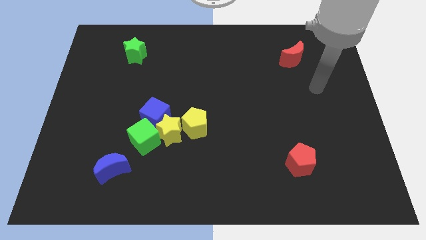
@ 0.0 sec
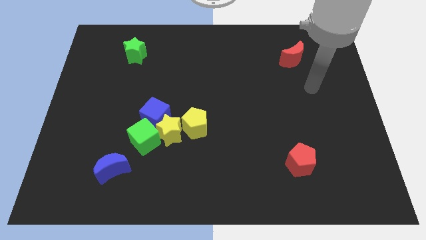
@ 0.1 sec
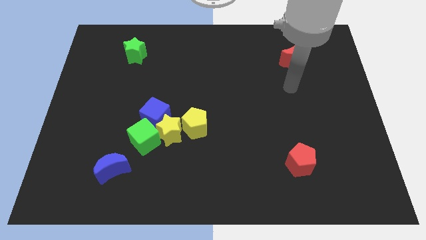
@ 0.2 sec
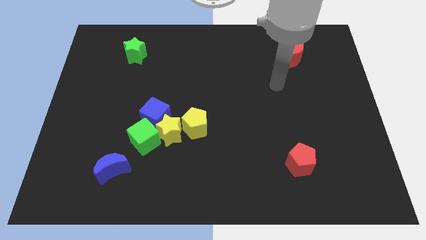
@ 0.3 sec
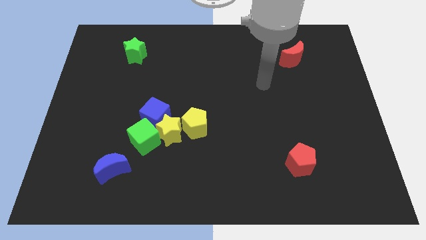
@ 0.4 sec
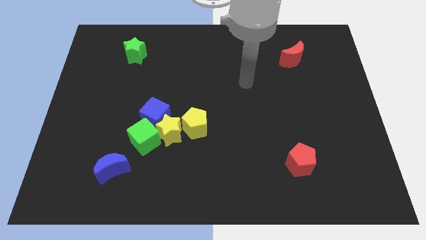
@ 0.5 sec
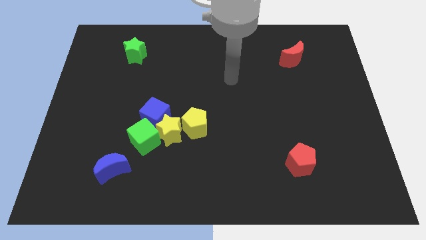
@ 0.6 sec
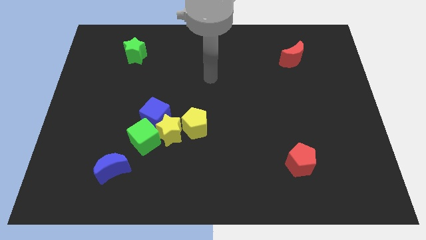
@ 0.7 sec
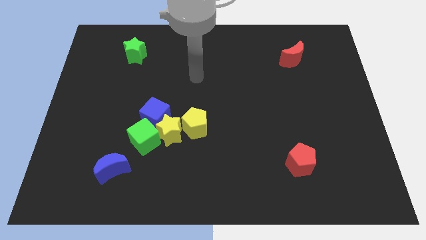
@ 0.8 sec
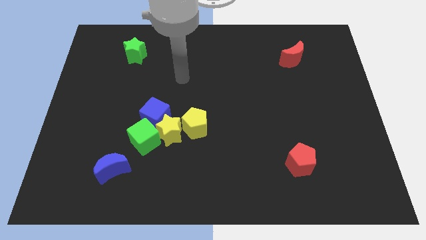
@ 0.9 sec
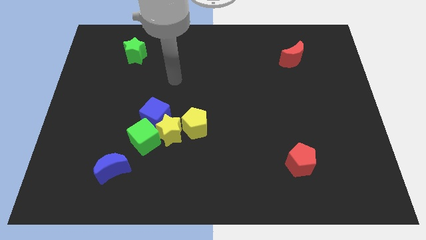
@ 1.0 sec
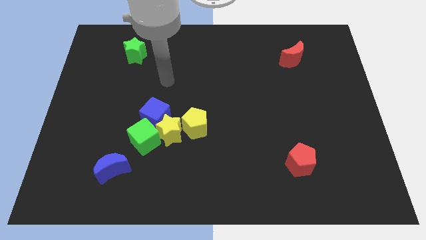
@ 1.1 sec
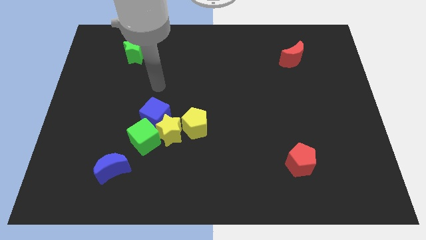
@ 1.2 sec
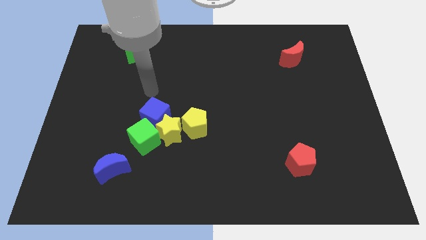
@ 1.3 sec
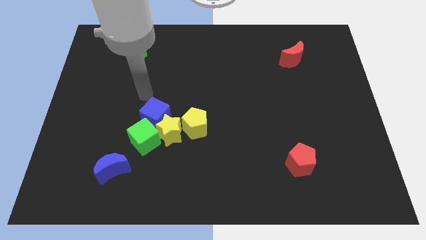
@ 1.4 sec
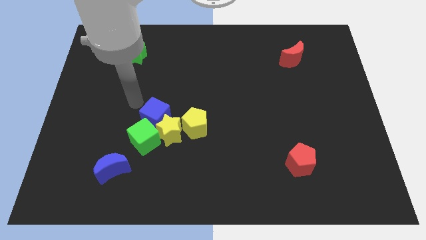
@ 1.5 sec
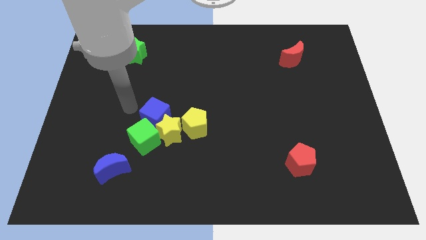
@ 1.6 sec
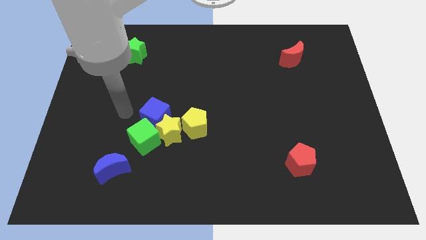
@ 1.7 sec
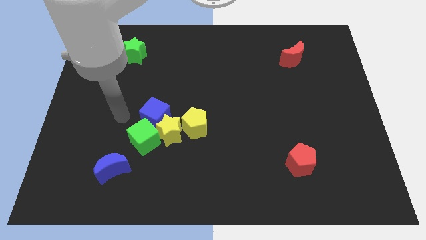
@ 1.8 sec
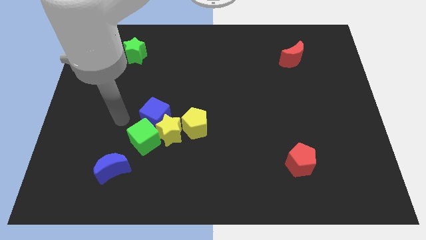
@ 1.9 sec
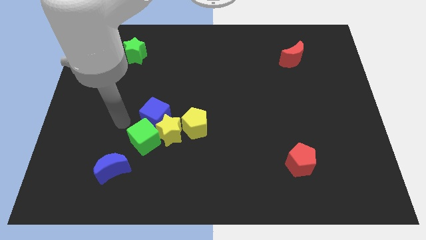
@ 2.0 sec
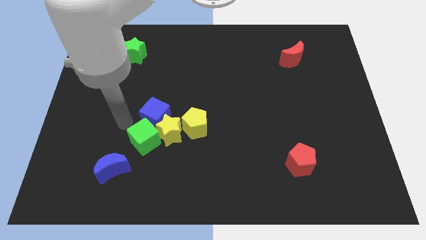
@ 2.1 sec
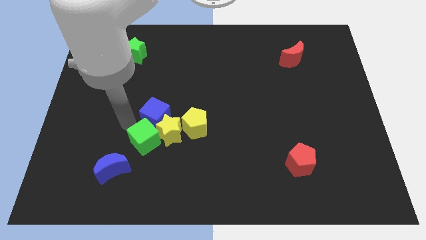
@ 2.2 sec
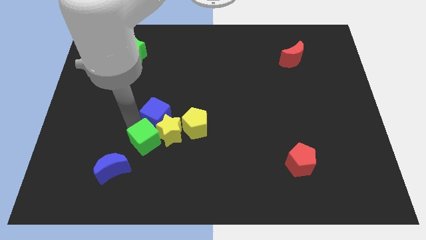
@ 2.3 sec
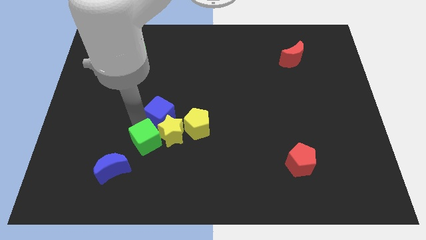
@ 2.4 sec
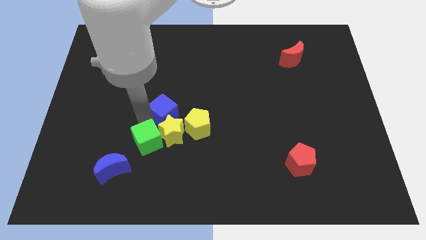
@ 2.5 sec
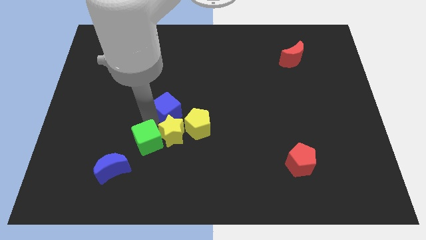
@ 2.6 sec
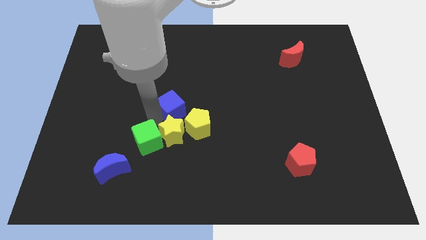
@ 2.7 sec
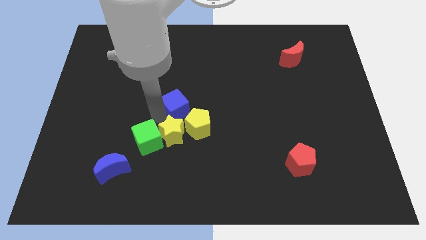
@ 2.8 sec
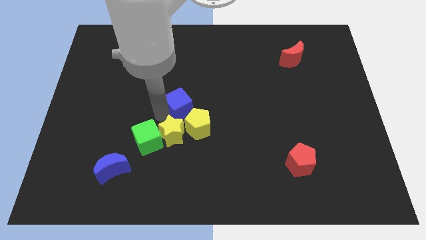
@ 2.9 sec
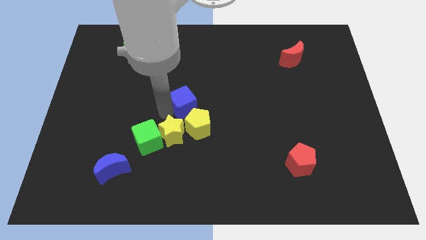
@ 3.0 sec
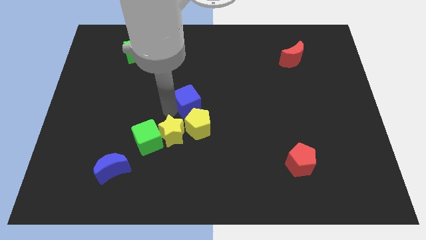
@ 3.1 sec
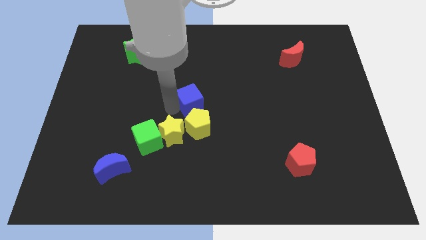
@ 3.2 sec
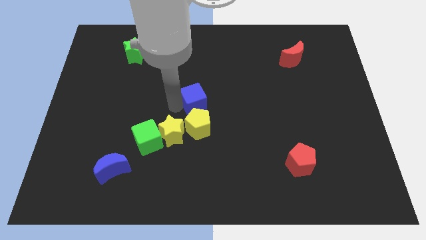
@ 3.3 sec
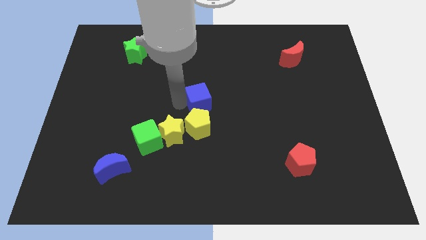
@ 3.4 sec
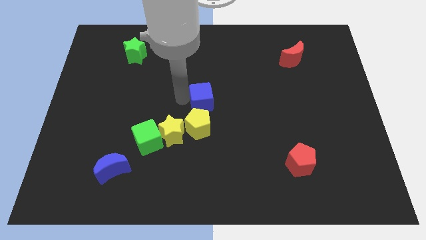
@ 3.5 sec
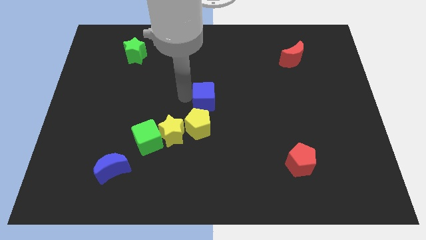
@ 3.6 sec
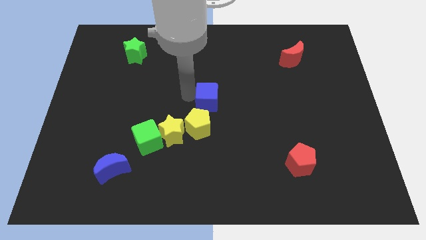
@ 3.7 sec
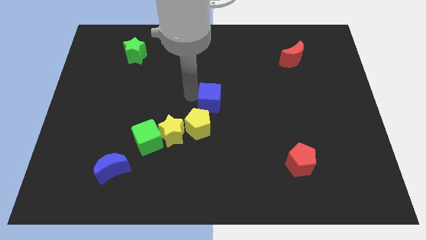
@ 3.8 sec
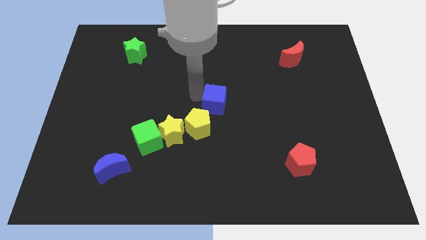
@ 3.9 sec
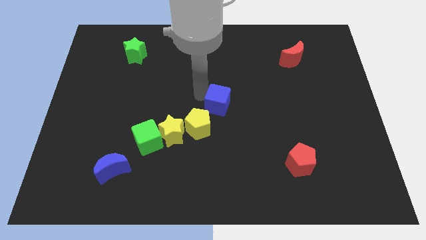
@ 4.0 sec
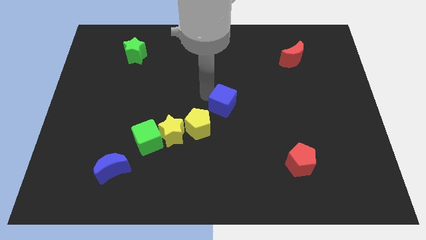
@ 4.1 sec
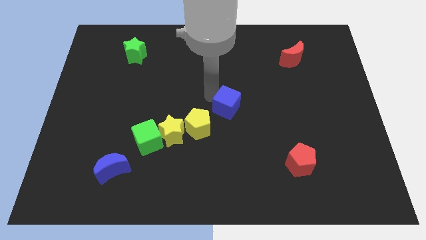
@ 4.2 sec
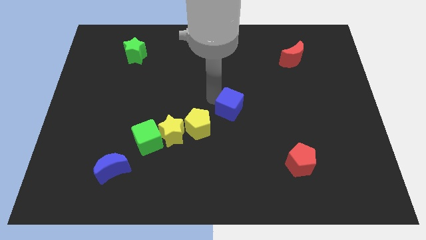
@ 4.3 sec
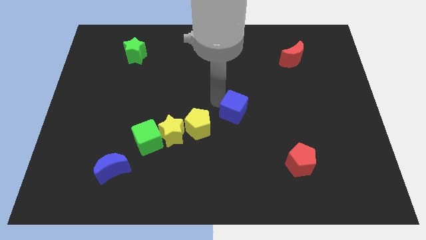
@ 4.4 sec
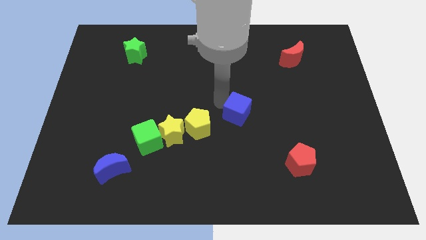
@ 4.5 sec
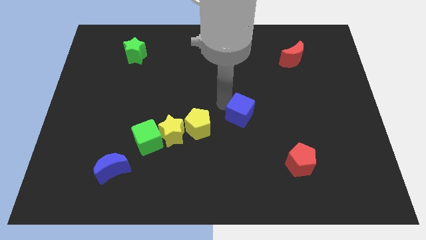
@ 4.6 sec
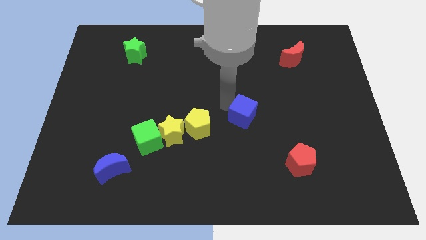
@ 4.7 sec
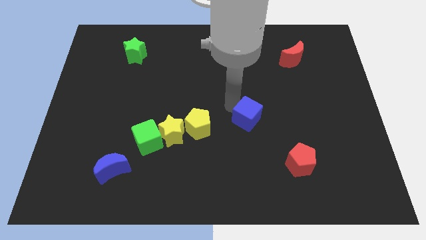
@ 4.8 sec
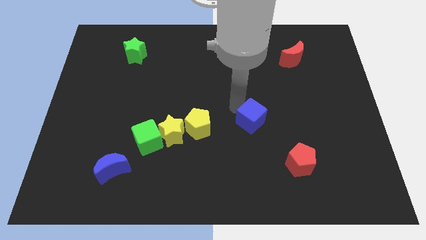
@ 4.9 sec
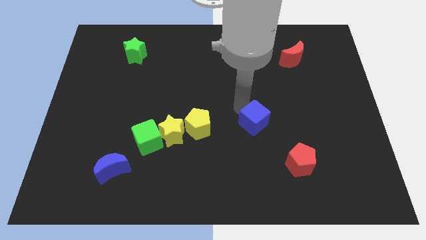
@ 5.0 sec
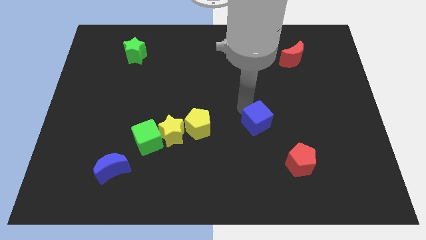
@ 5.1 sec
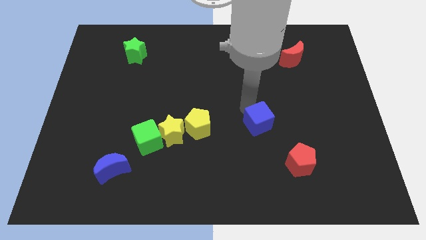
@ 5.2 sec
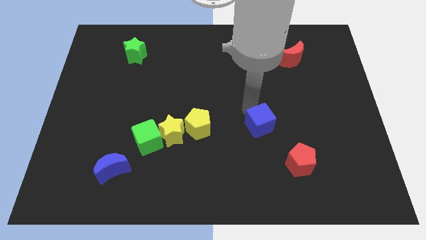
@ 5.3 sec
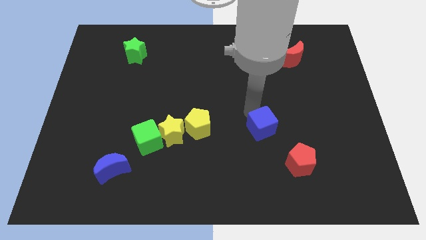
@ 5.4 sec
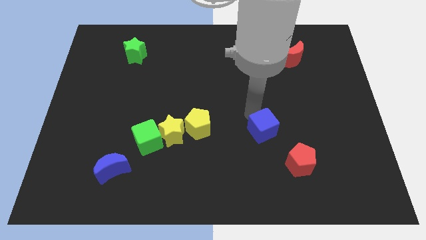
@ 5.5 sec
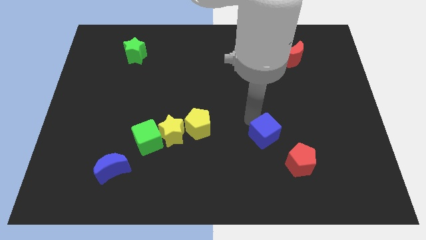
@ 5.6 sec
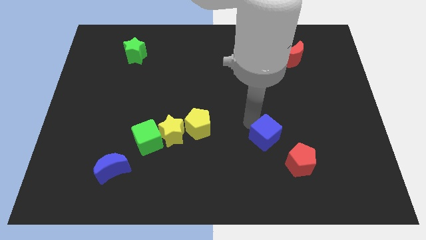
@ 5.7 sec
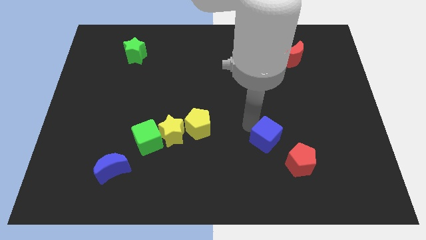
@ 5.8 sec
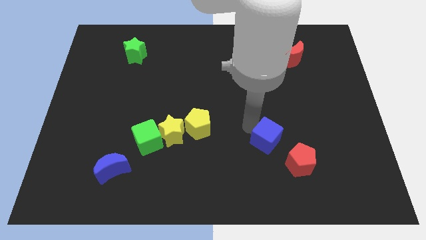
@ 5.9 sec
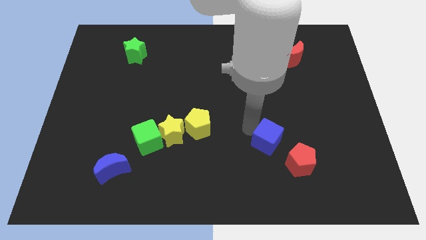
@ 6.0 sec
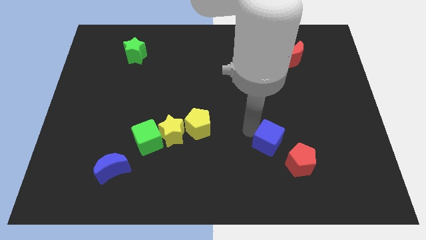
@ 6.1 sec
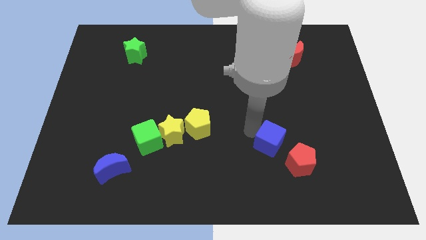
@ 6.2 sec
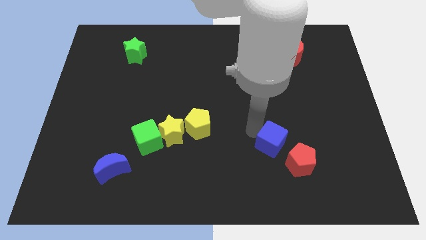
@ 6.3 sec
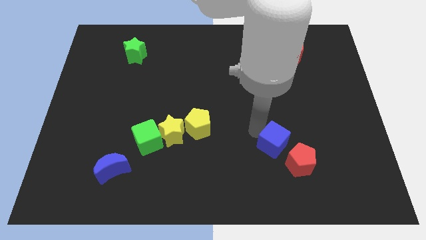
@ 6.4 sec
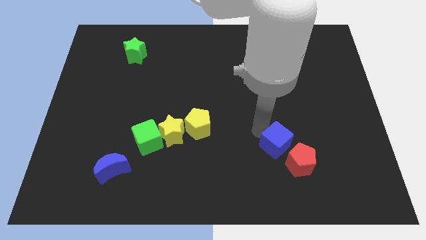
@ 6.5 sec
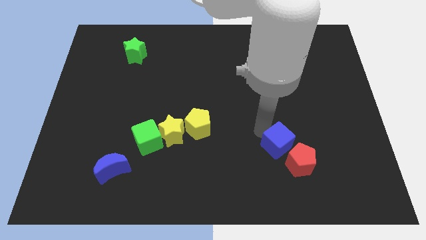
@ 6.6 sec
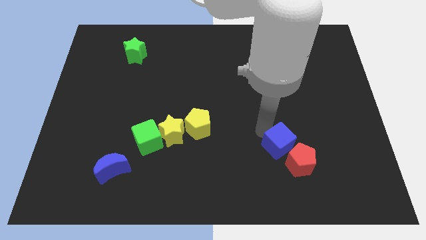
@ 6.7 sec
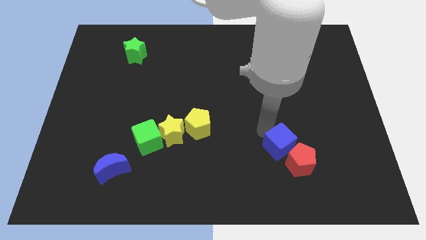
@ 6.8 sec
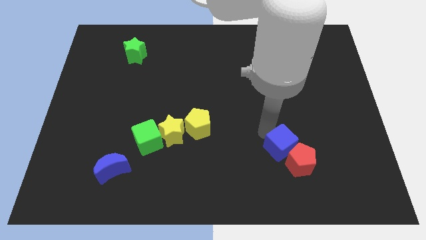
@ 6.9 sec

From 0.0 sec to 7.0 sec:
push the blue cube to the red pentagon

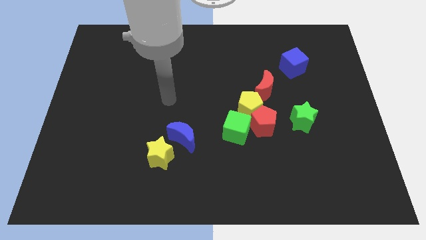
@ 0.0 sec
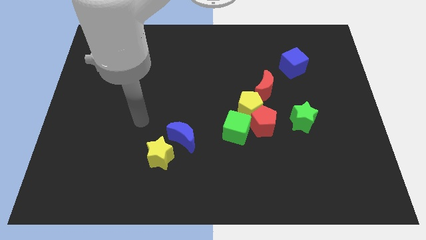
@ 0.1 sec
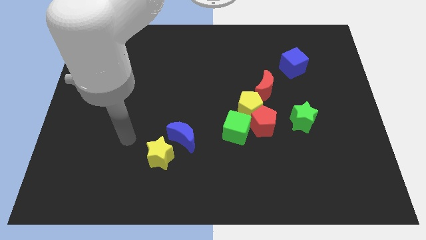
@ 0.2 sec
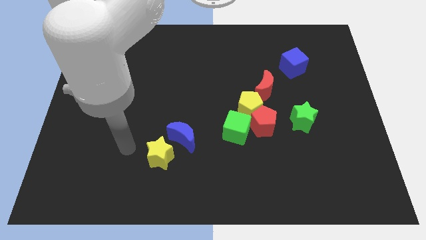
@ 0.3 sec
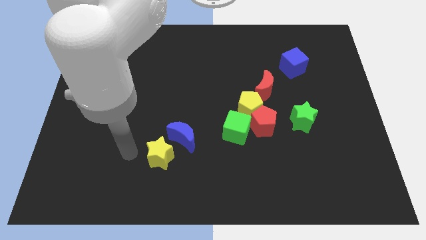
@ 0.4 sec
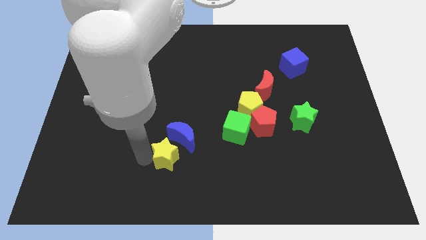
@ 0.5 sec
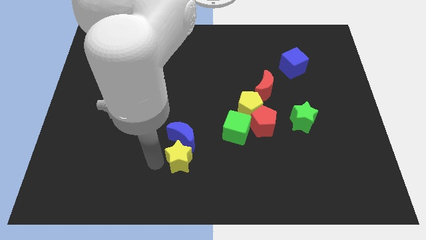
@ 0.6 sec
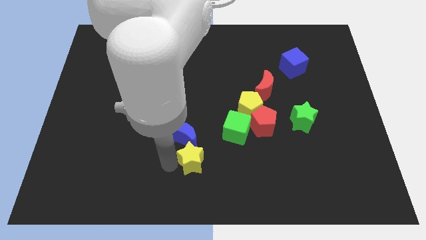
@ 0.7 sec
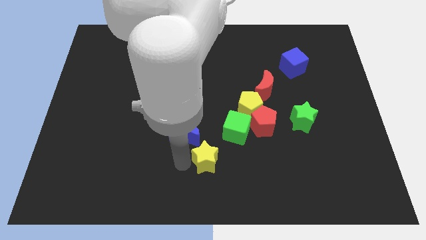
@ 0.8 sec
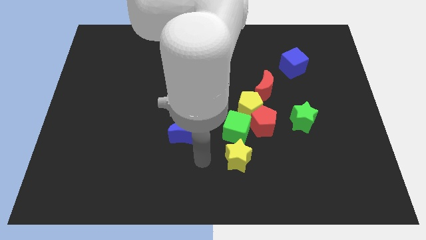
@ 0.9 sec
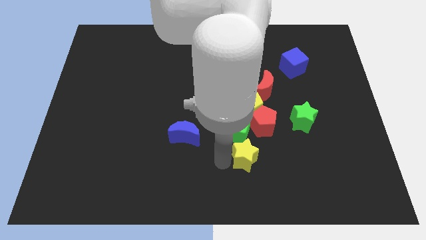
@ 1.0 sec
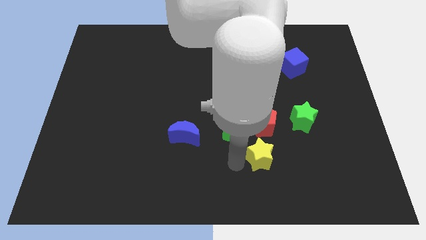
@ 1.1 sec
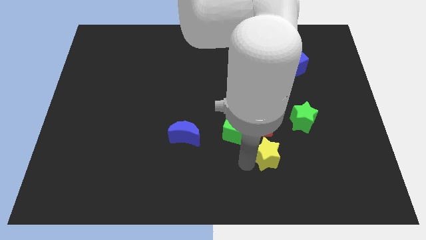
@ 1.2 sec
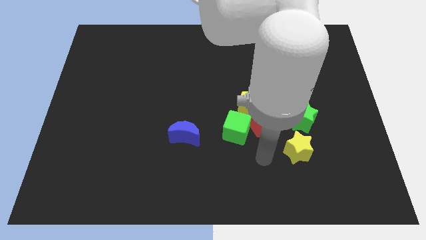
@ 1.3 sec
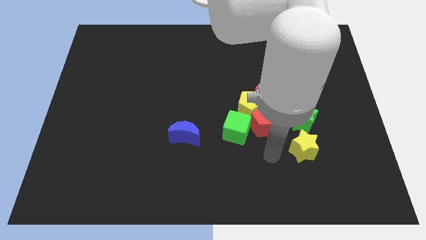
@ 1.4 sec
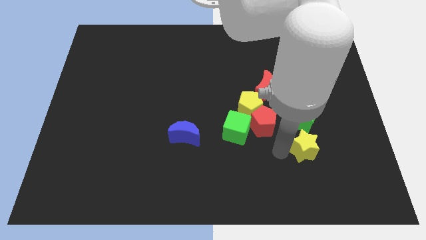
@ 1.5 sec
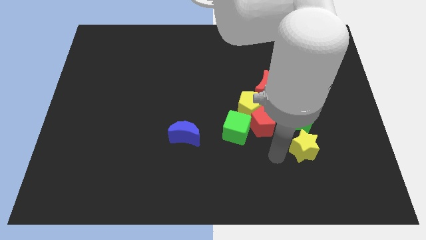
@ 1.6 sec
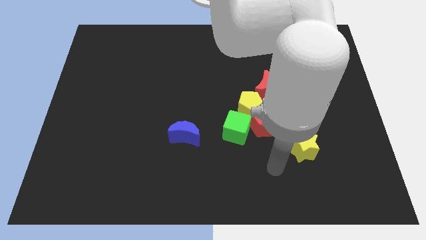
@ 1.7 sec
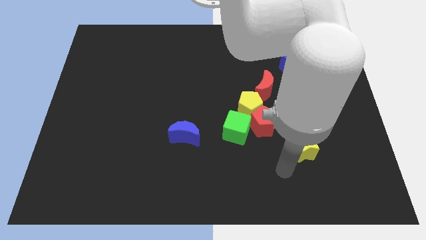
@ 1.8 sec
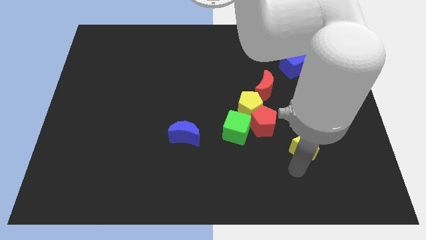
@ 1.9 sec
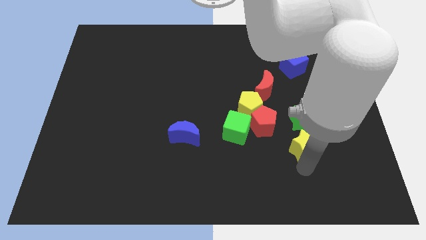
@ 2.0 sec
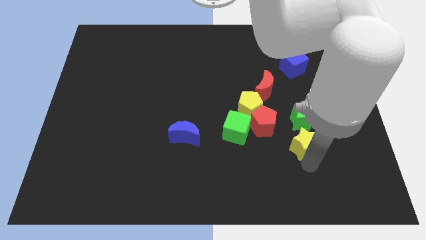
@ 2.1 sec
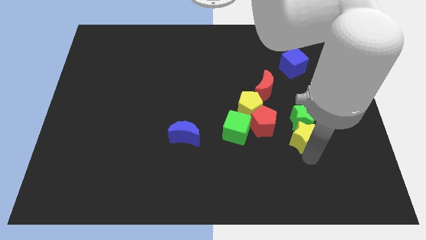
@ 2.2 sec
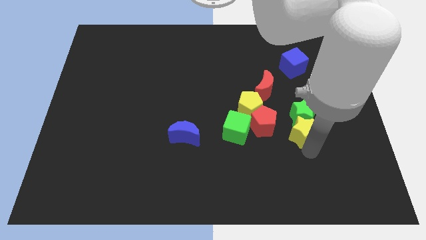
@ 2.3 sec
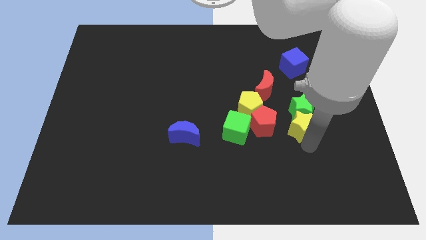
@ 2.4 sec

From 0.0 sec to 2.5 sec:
slide the yellow star towards the green star
